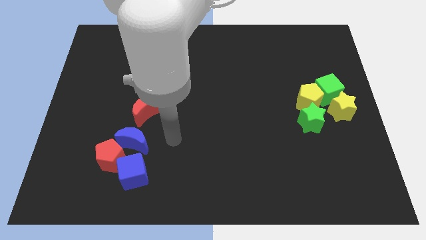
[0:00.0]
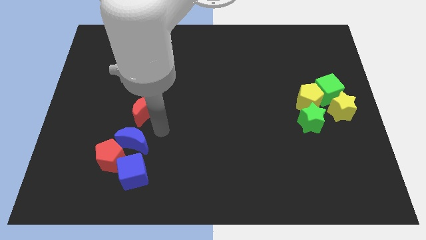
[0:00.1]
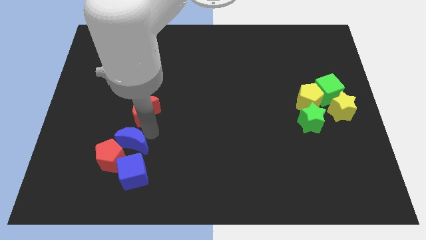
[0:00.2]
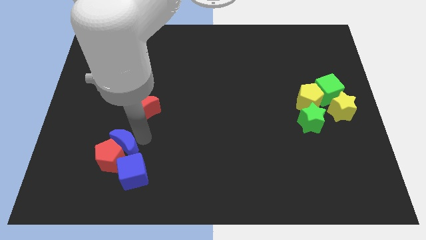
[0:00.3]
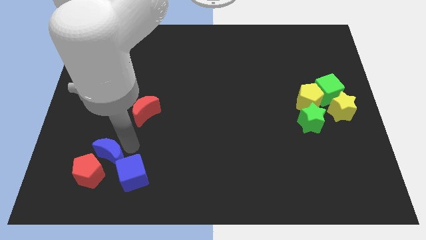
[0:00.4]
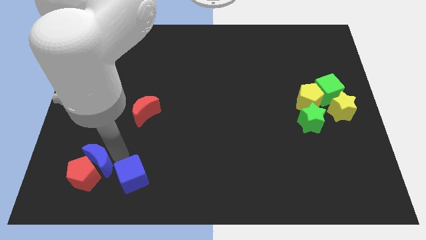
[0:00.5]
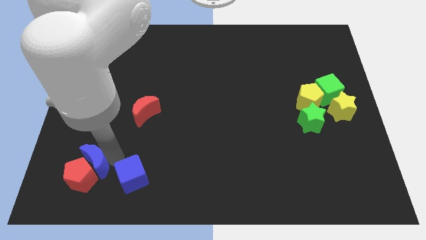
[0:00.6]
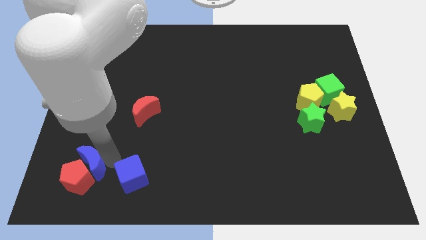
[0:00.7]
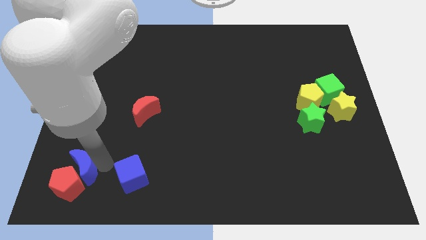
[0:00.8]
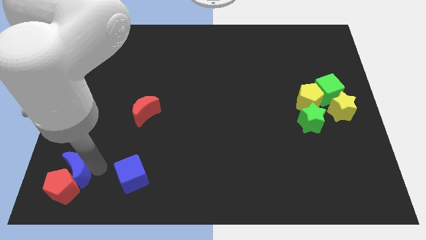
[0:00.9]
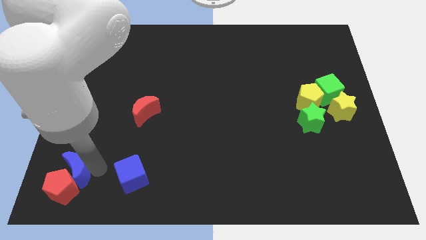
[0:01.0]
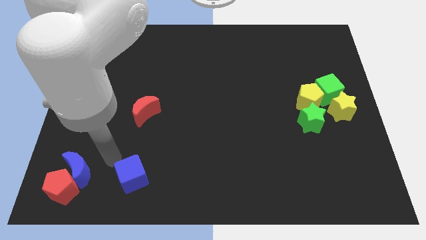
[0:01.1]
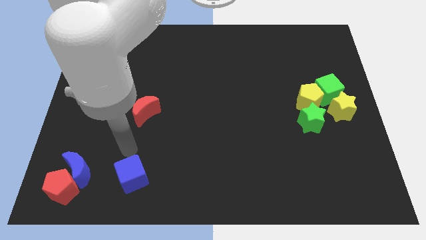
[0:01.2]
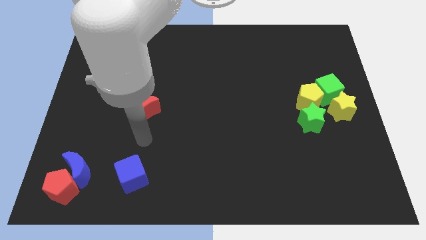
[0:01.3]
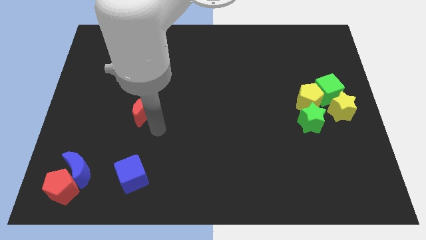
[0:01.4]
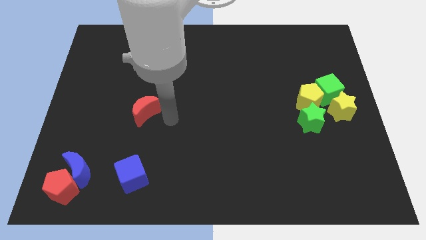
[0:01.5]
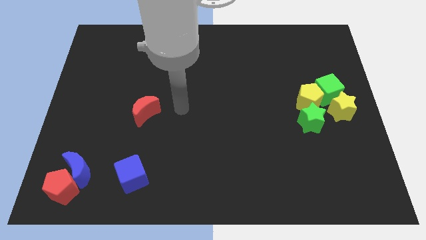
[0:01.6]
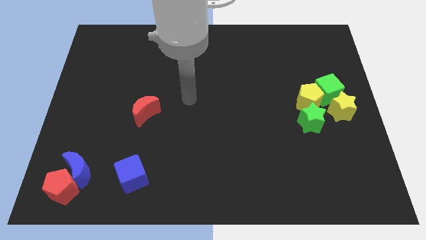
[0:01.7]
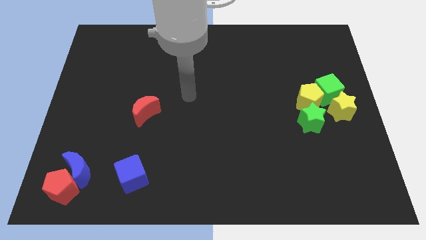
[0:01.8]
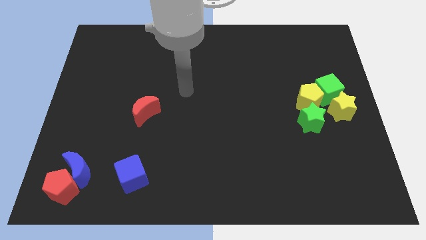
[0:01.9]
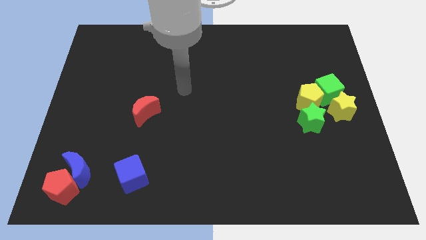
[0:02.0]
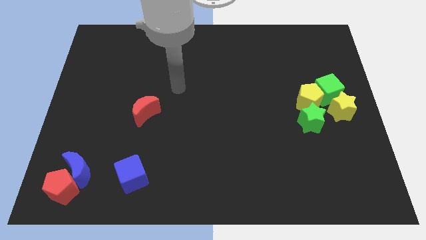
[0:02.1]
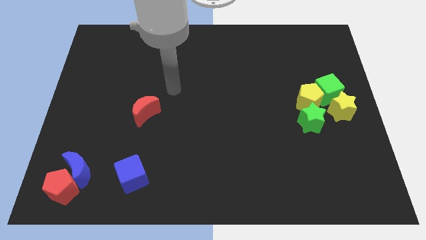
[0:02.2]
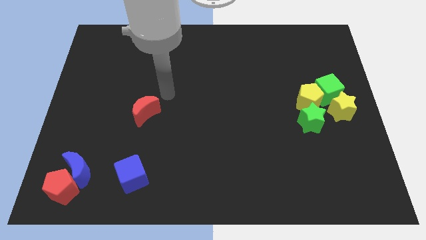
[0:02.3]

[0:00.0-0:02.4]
push the blue moon and red pentagon towards the bottom left corner of the board

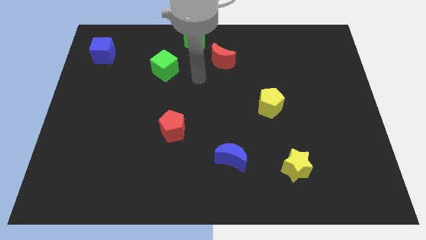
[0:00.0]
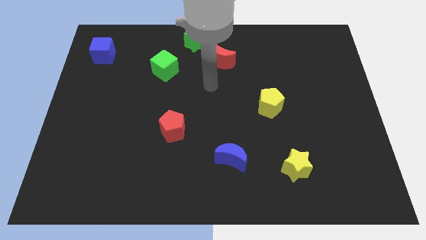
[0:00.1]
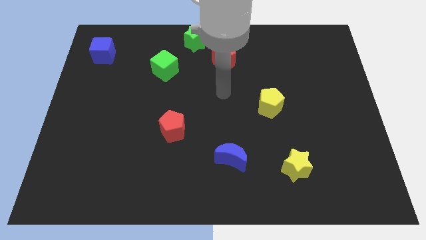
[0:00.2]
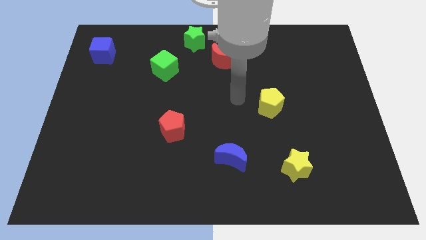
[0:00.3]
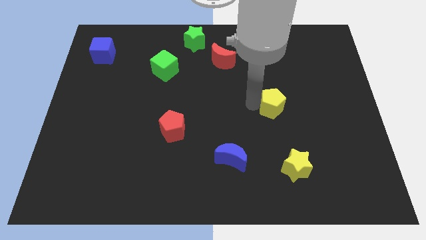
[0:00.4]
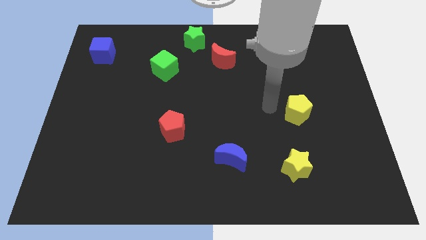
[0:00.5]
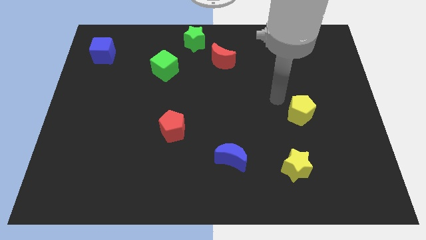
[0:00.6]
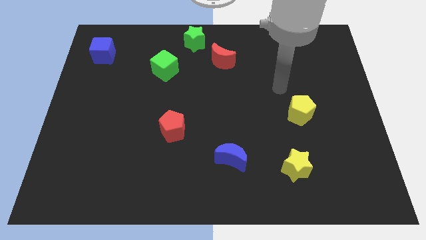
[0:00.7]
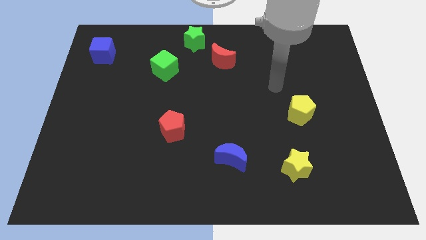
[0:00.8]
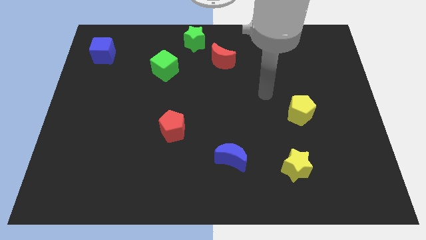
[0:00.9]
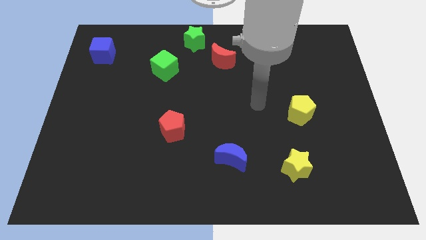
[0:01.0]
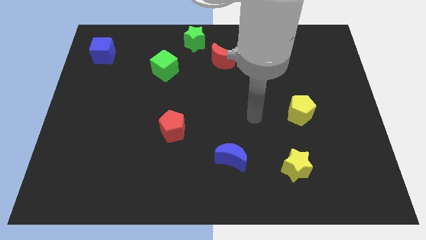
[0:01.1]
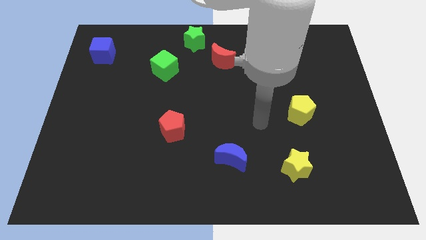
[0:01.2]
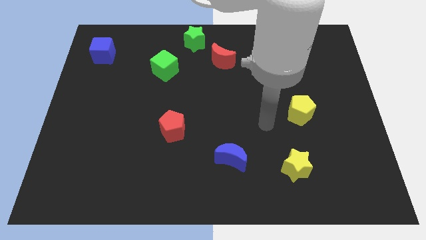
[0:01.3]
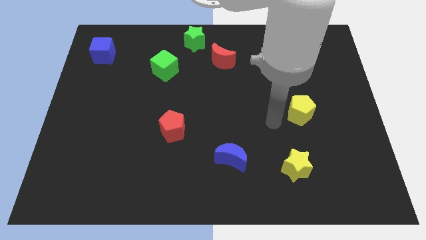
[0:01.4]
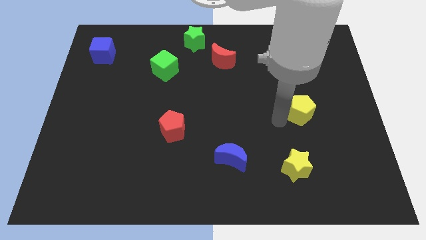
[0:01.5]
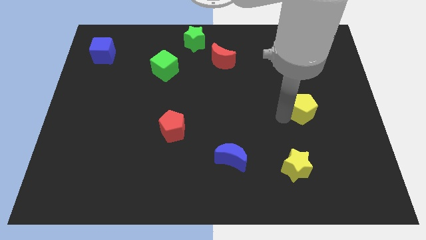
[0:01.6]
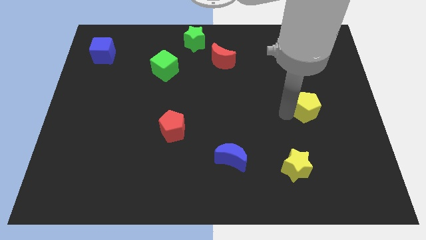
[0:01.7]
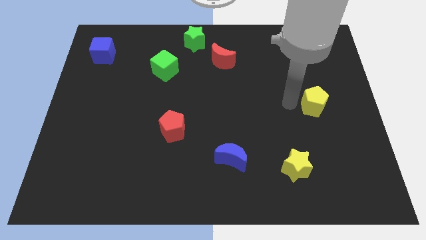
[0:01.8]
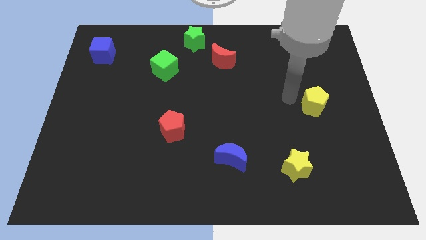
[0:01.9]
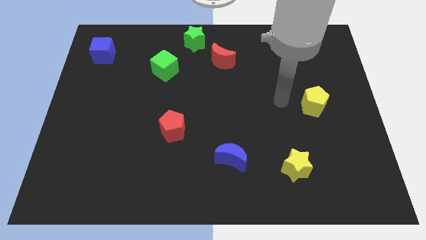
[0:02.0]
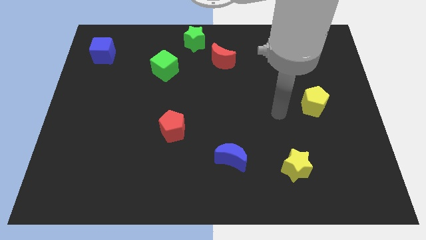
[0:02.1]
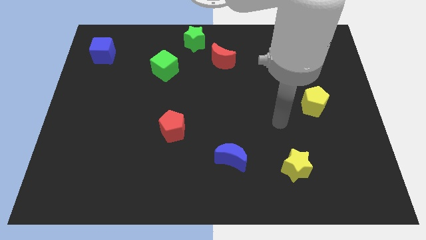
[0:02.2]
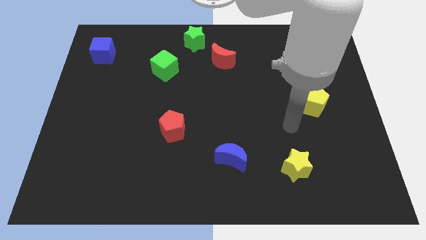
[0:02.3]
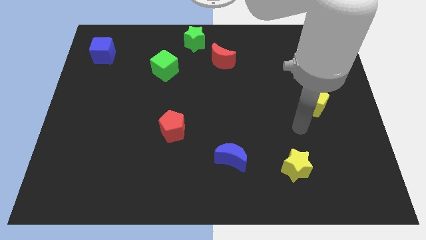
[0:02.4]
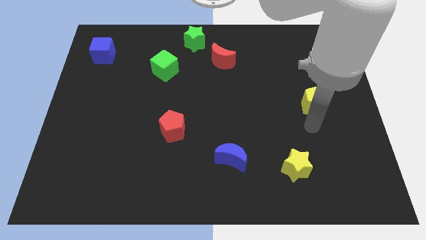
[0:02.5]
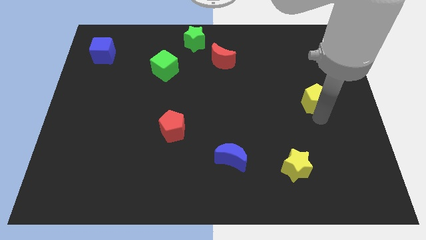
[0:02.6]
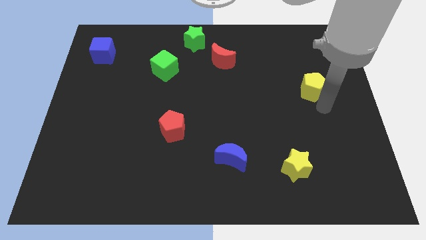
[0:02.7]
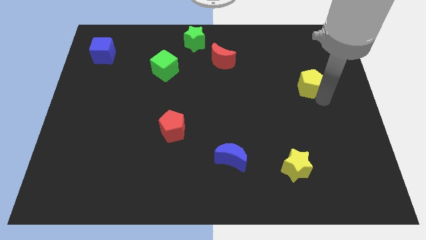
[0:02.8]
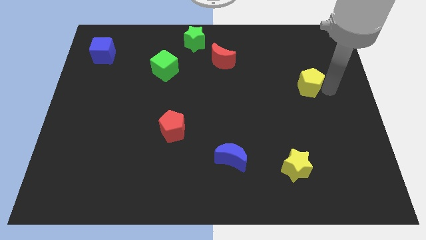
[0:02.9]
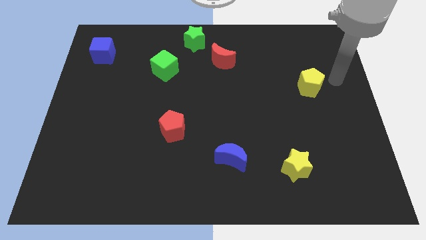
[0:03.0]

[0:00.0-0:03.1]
push the yellow pentagon towards the top right of the board

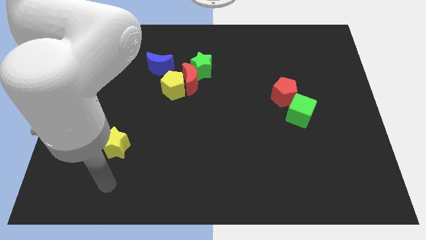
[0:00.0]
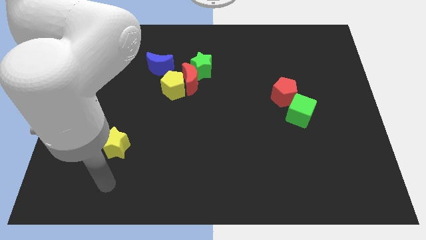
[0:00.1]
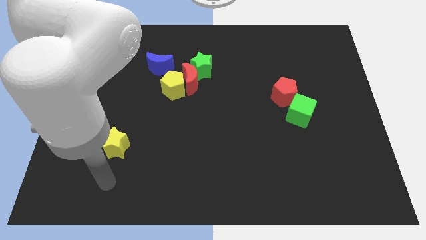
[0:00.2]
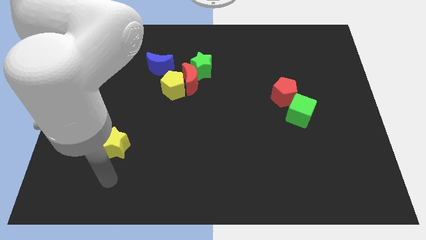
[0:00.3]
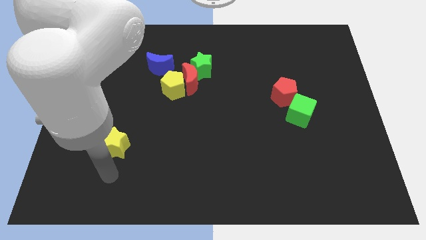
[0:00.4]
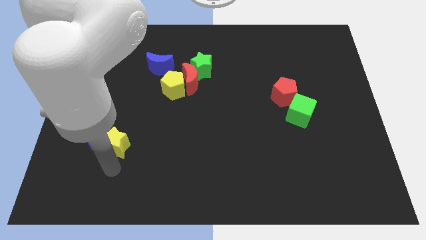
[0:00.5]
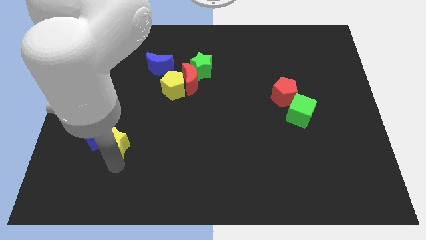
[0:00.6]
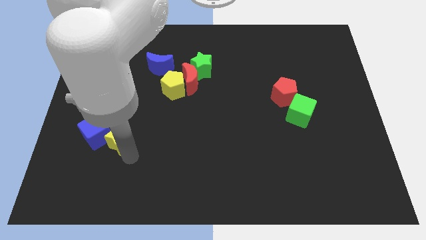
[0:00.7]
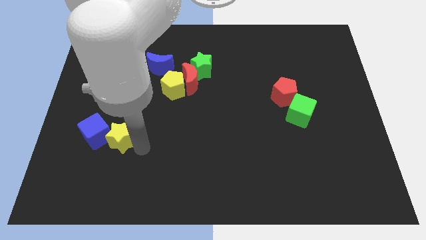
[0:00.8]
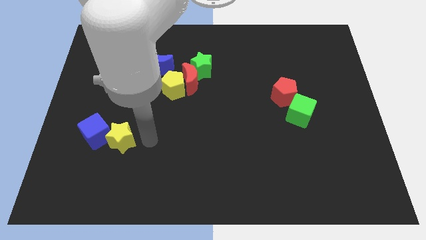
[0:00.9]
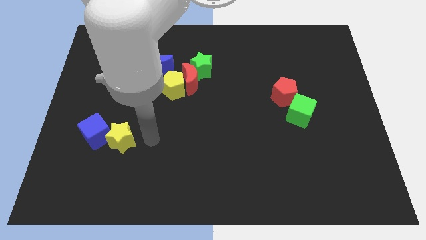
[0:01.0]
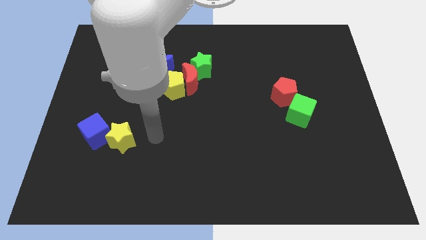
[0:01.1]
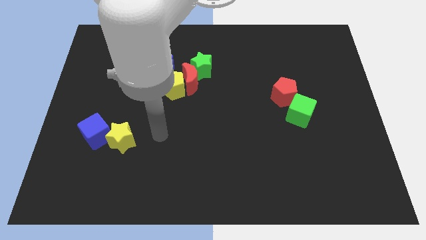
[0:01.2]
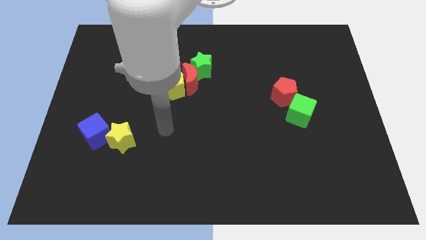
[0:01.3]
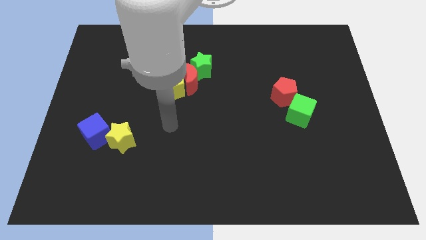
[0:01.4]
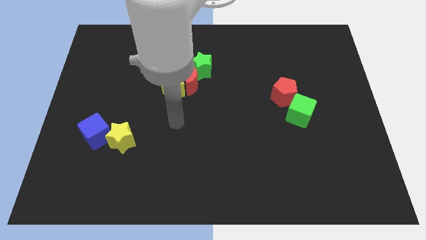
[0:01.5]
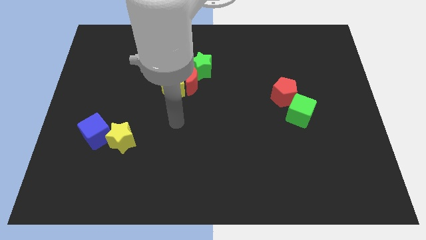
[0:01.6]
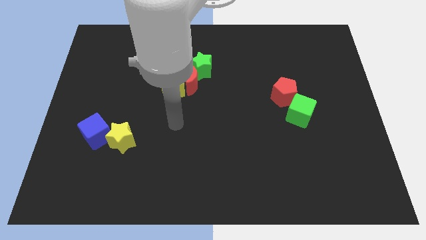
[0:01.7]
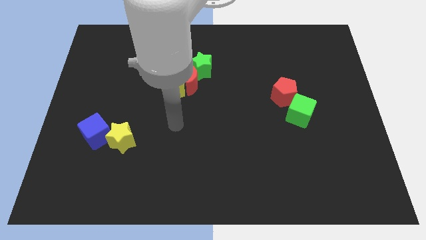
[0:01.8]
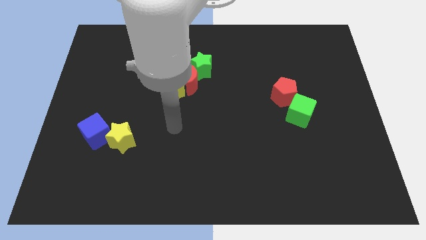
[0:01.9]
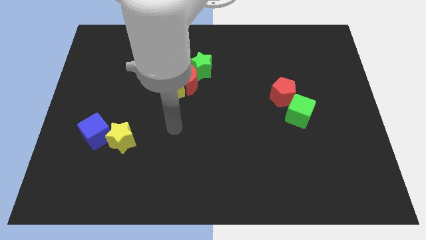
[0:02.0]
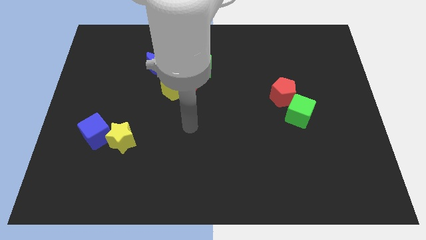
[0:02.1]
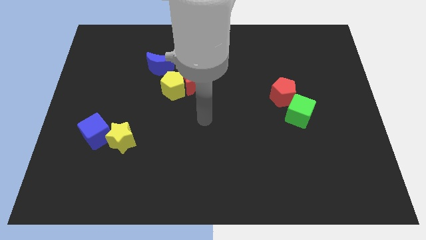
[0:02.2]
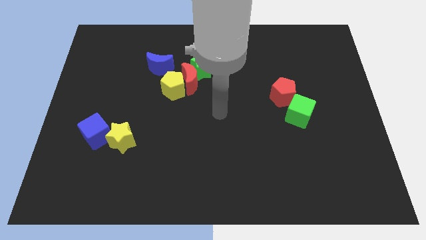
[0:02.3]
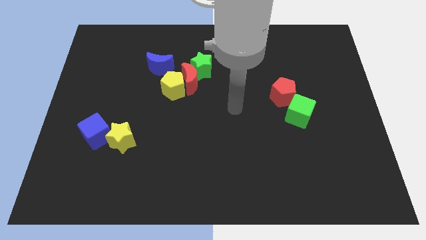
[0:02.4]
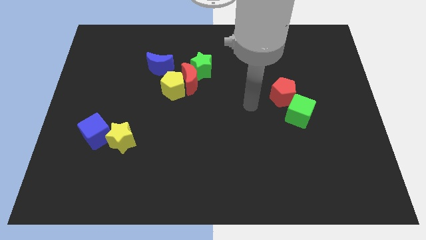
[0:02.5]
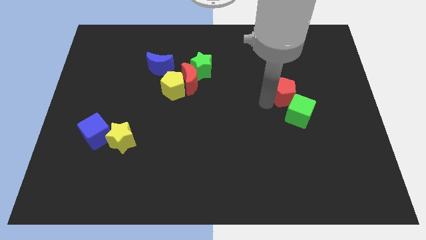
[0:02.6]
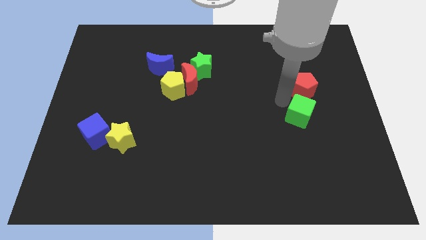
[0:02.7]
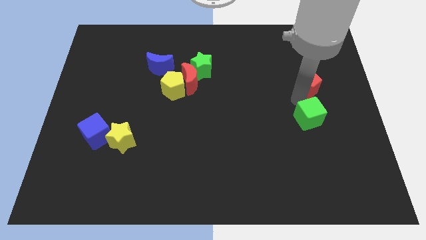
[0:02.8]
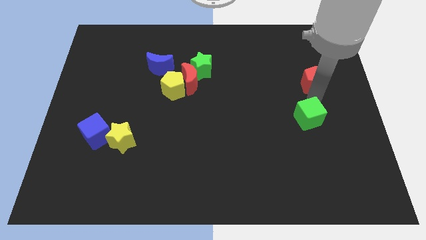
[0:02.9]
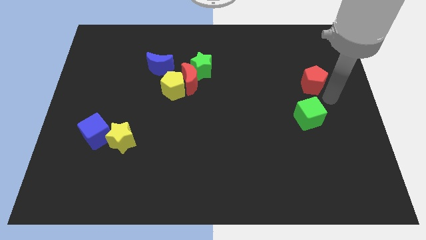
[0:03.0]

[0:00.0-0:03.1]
push yellow star and red pentagon slightly to the right

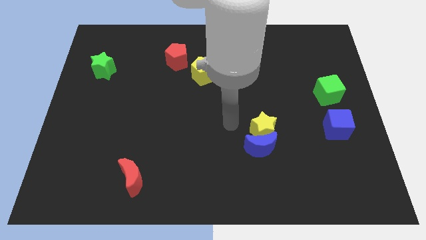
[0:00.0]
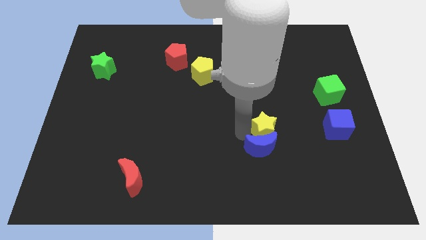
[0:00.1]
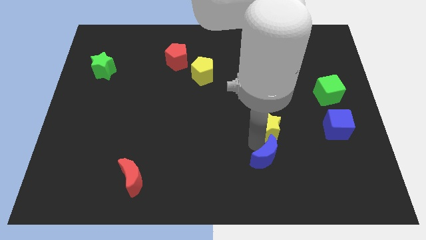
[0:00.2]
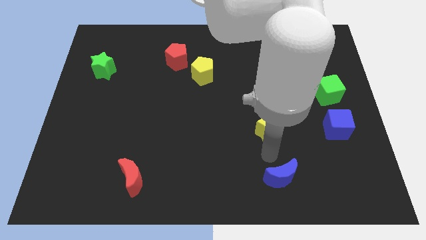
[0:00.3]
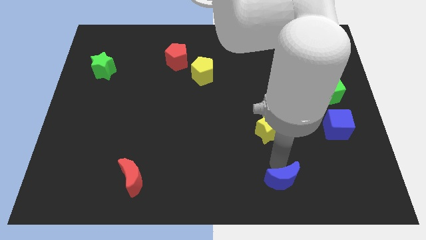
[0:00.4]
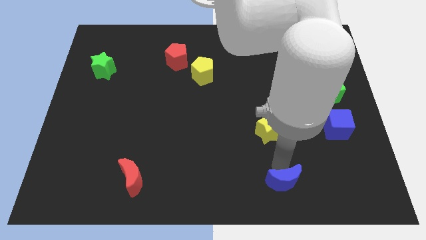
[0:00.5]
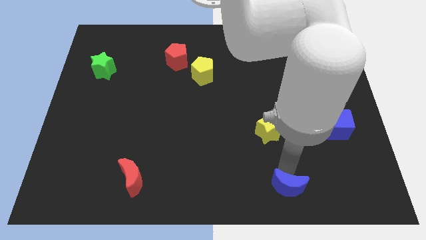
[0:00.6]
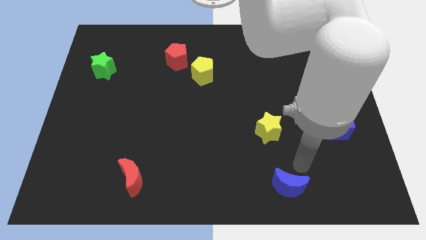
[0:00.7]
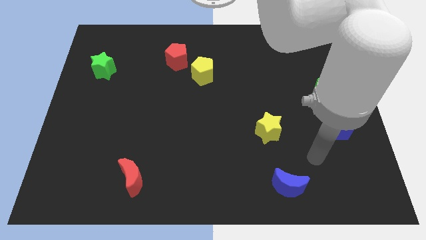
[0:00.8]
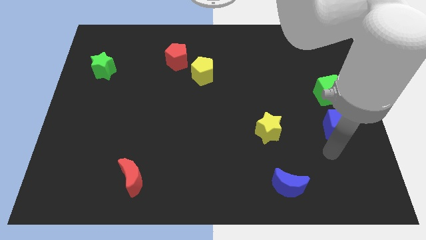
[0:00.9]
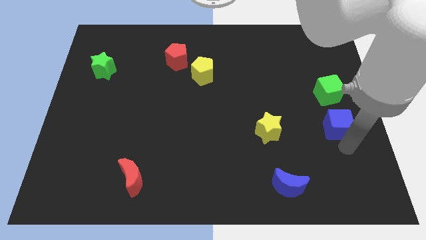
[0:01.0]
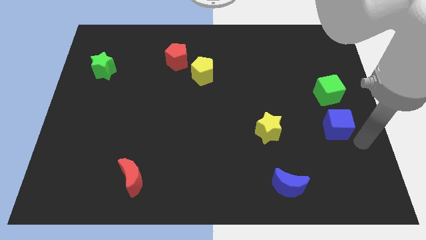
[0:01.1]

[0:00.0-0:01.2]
separate blue moon from the yellow star
